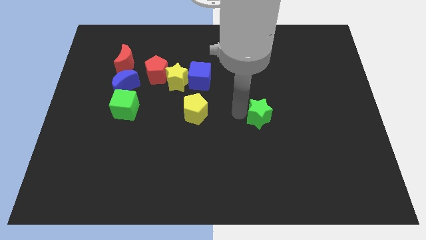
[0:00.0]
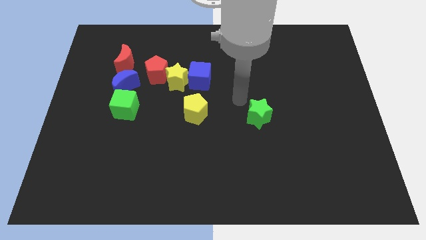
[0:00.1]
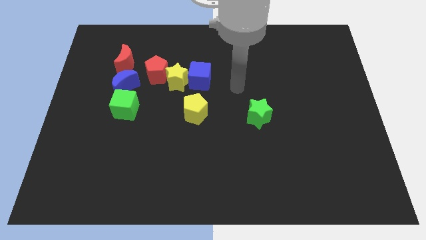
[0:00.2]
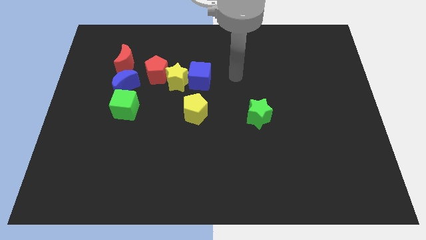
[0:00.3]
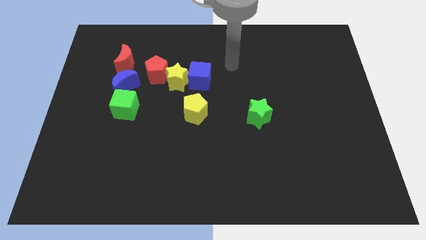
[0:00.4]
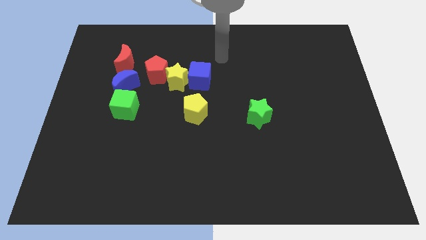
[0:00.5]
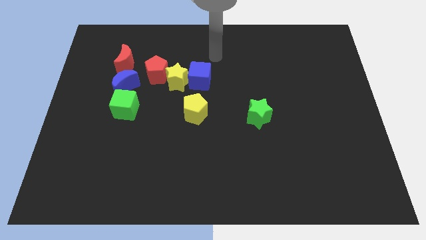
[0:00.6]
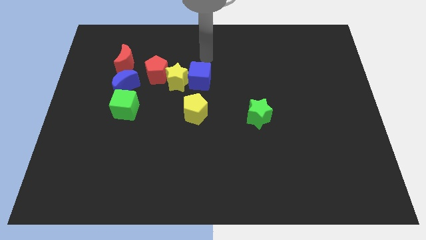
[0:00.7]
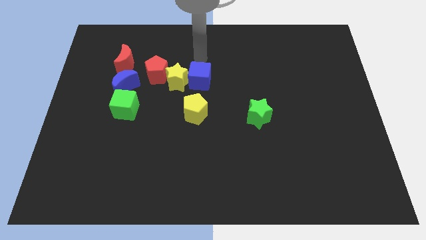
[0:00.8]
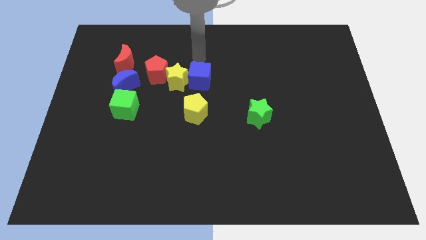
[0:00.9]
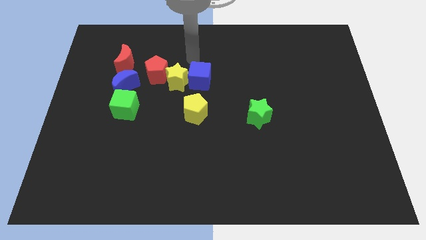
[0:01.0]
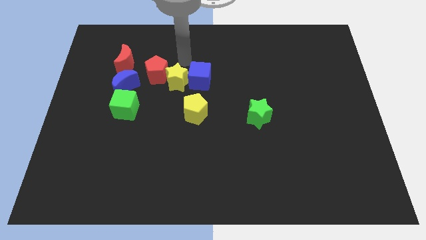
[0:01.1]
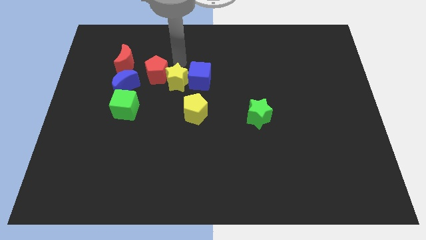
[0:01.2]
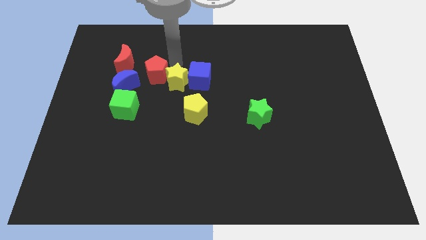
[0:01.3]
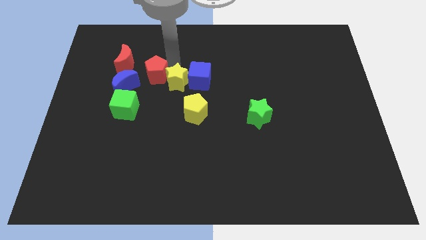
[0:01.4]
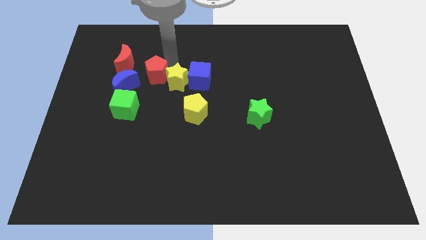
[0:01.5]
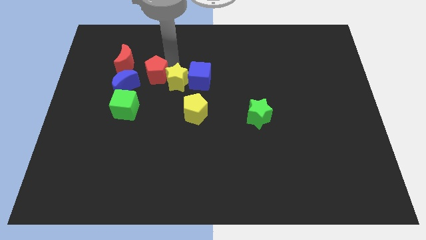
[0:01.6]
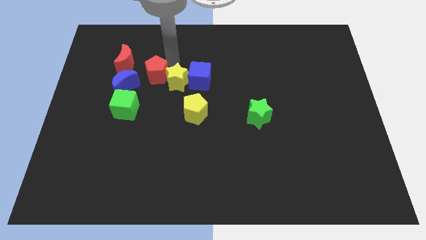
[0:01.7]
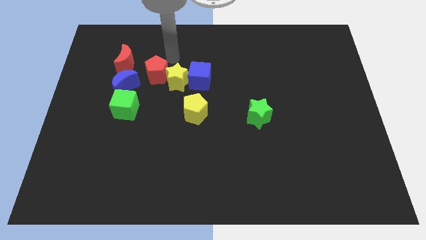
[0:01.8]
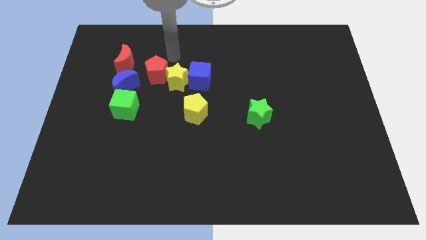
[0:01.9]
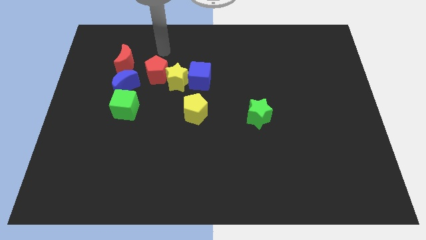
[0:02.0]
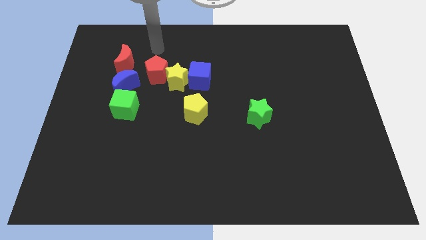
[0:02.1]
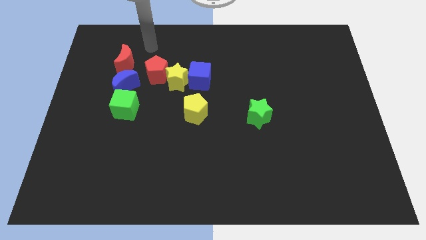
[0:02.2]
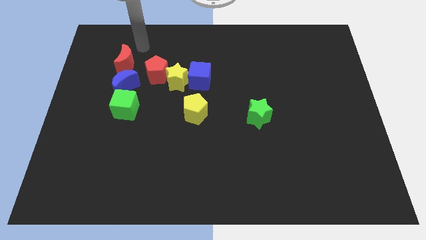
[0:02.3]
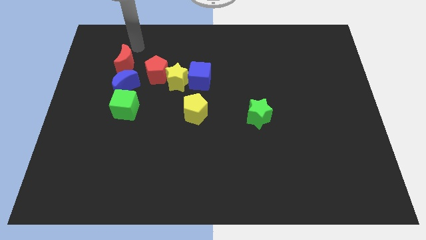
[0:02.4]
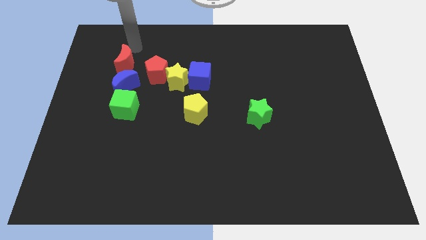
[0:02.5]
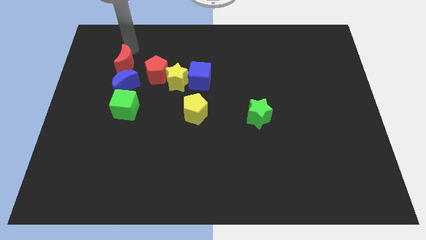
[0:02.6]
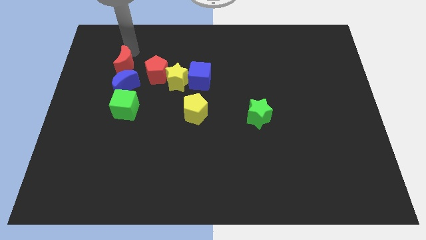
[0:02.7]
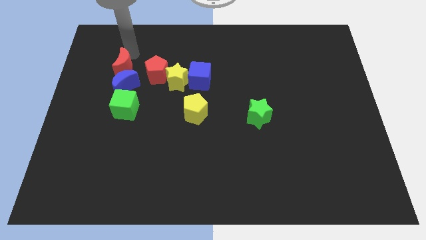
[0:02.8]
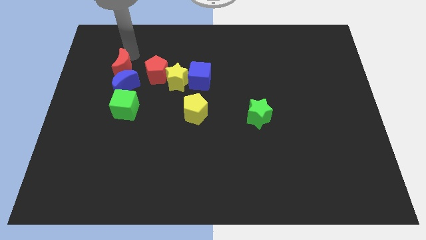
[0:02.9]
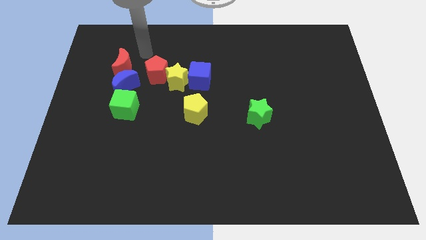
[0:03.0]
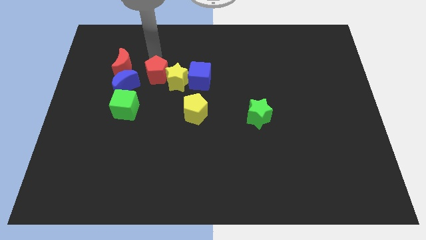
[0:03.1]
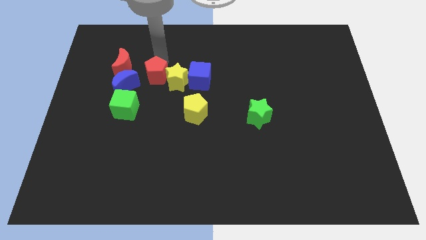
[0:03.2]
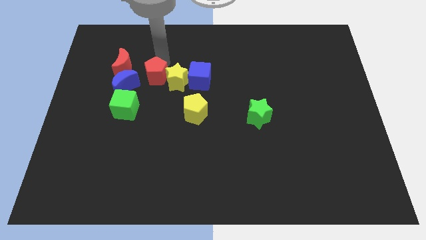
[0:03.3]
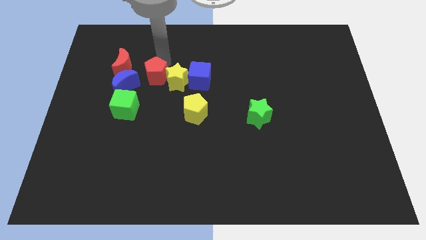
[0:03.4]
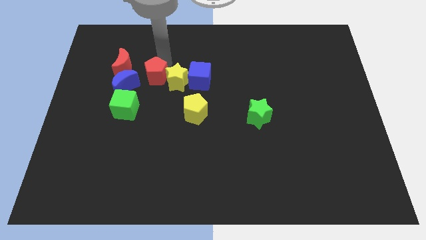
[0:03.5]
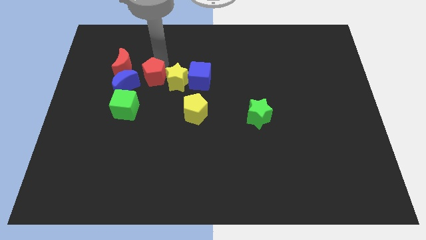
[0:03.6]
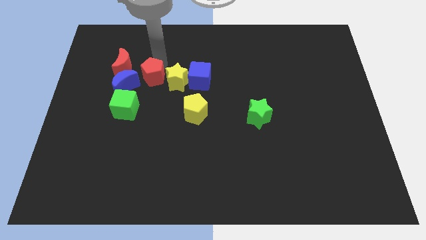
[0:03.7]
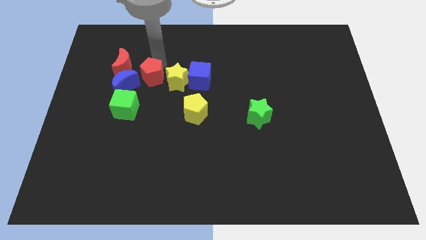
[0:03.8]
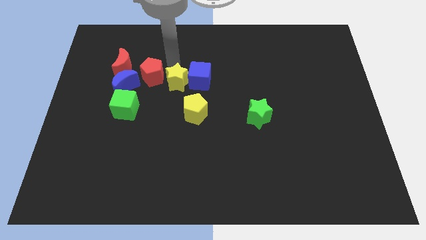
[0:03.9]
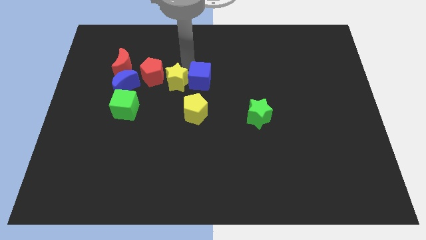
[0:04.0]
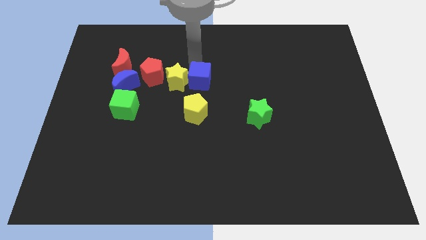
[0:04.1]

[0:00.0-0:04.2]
move your arm away from the green star

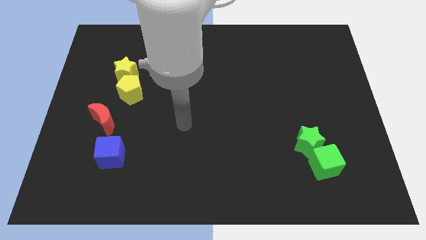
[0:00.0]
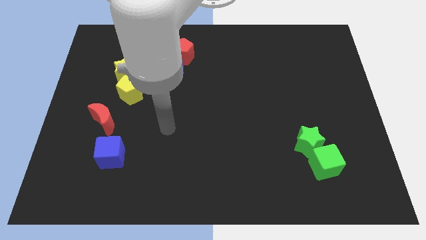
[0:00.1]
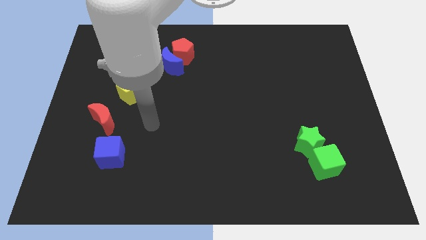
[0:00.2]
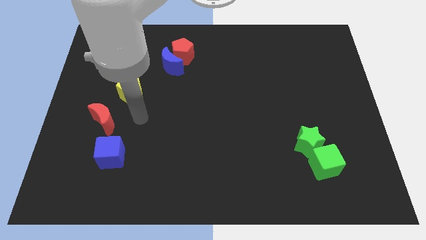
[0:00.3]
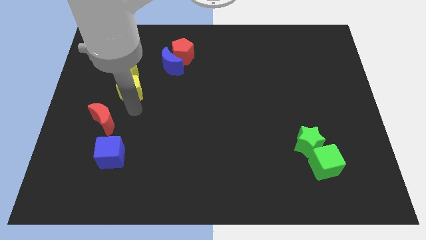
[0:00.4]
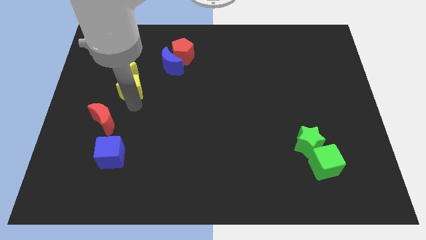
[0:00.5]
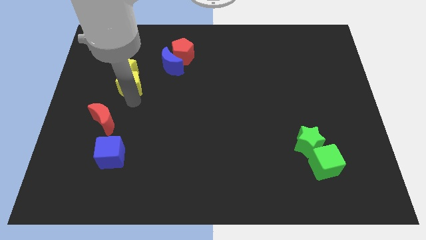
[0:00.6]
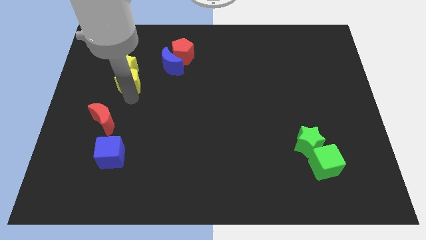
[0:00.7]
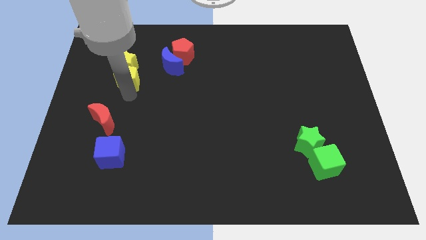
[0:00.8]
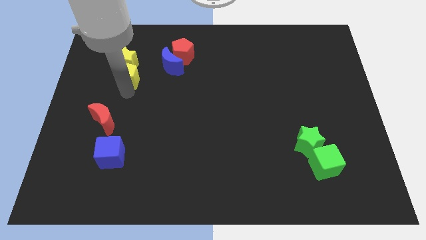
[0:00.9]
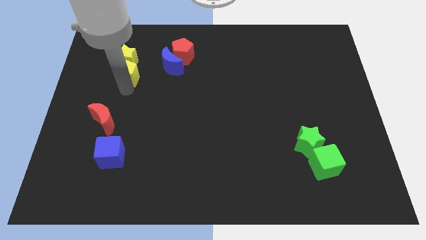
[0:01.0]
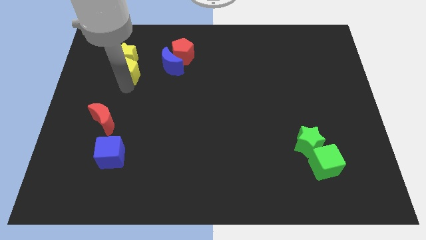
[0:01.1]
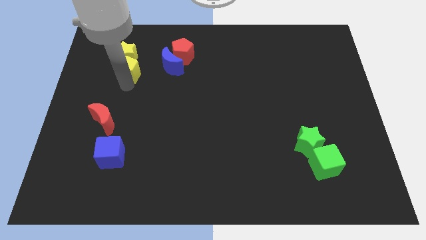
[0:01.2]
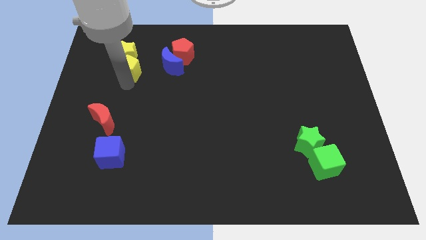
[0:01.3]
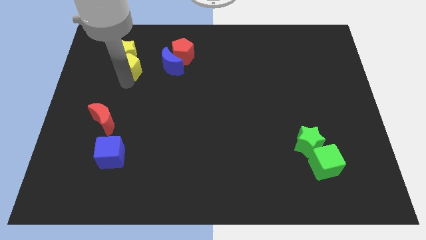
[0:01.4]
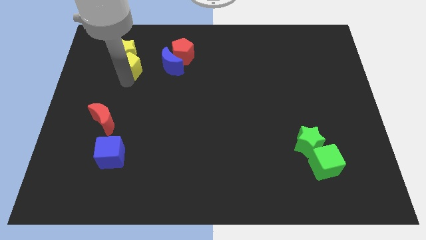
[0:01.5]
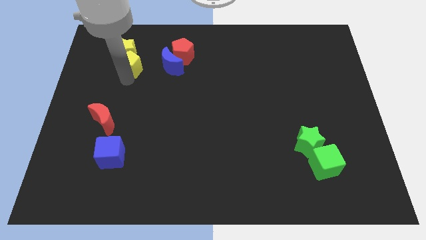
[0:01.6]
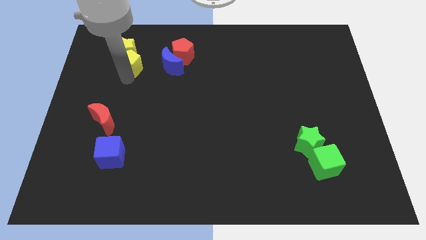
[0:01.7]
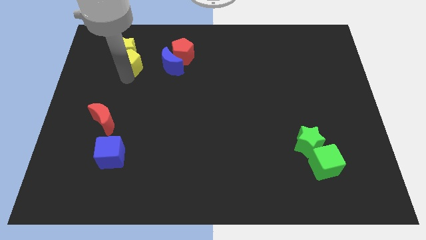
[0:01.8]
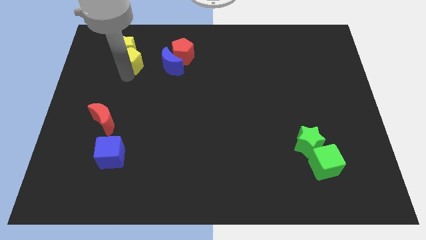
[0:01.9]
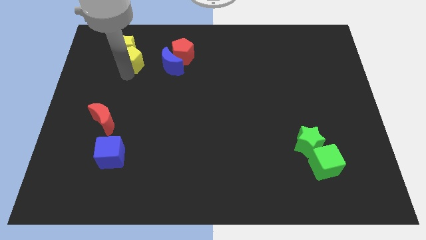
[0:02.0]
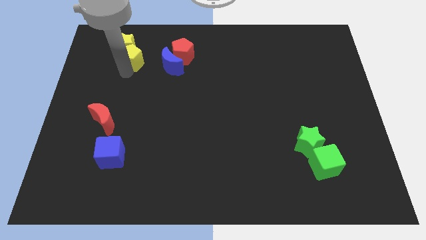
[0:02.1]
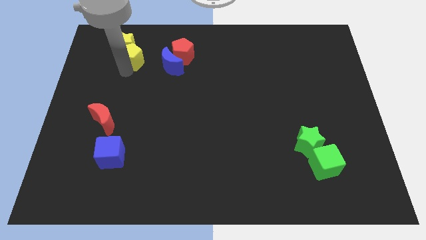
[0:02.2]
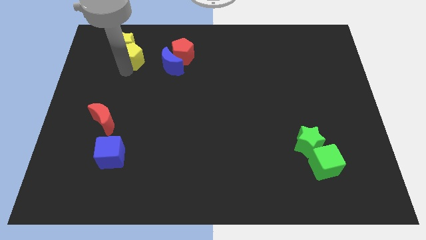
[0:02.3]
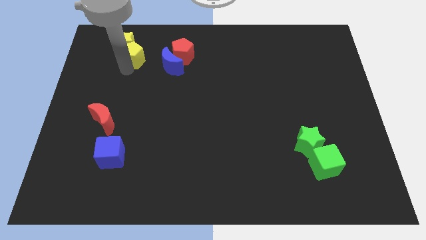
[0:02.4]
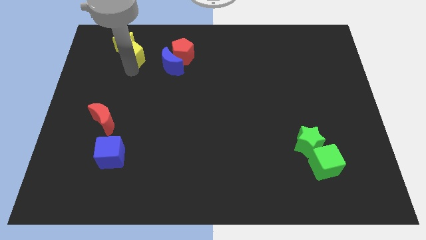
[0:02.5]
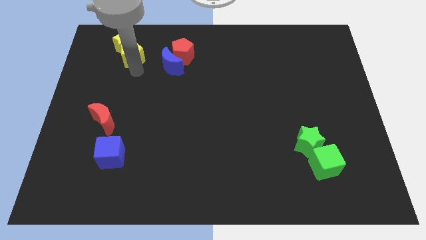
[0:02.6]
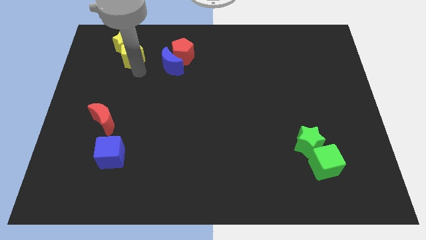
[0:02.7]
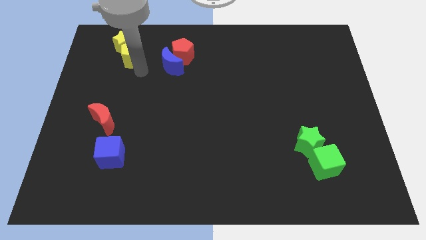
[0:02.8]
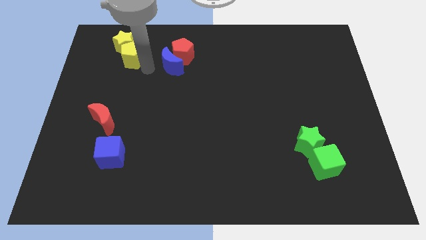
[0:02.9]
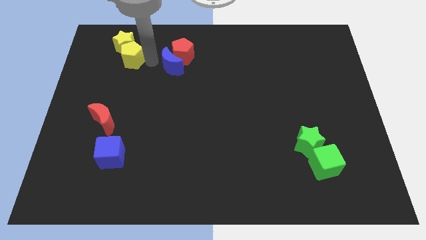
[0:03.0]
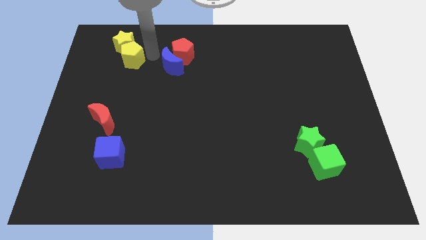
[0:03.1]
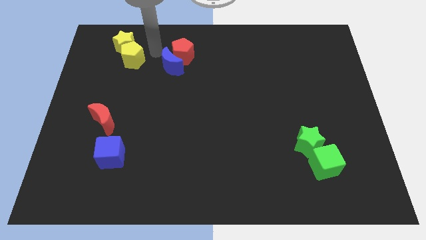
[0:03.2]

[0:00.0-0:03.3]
push the yellow star towards the top left corner with the yellow pentagon

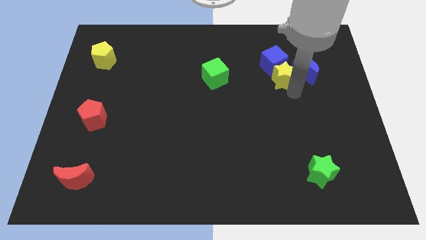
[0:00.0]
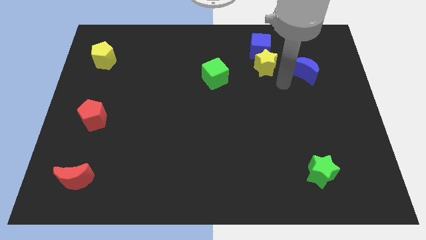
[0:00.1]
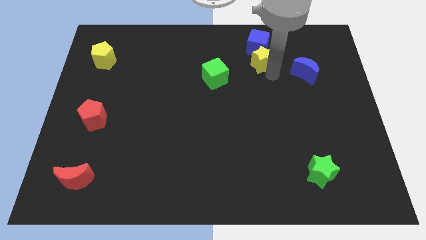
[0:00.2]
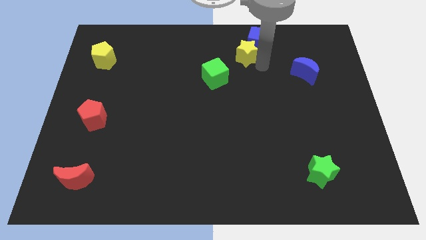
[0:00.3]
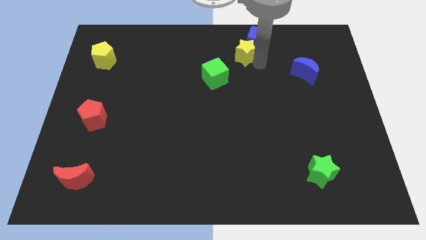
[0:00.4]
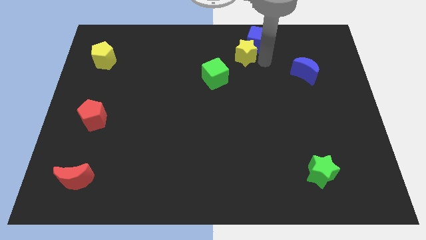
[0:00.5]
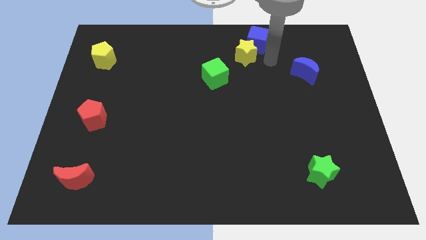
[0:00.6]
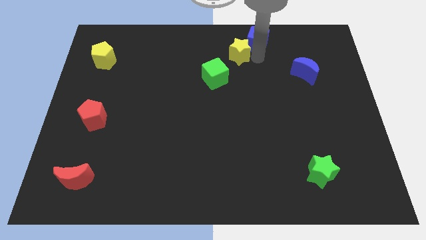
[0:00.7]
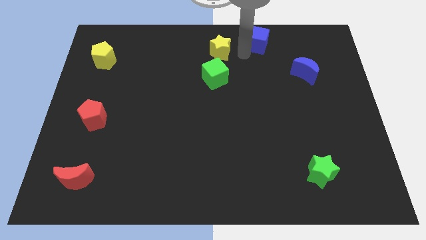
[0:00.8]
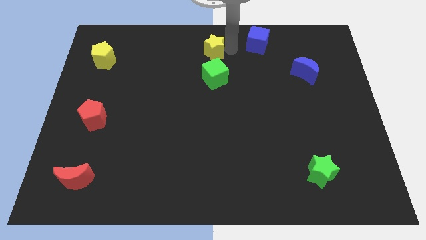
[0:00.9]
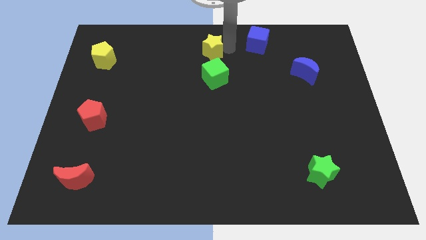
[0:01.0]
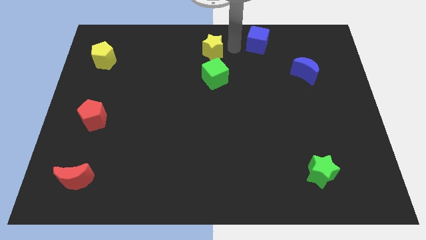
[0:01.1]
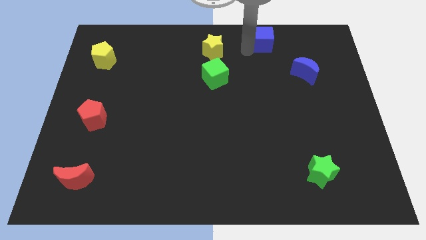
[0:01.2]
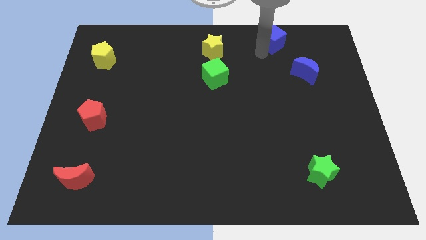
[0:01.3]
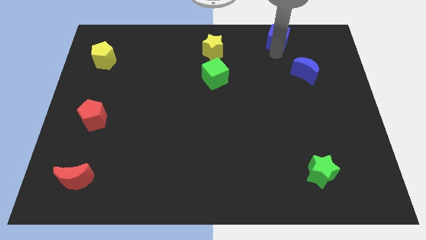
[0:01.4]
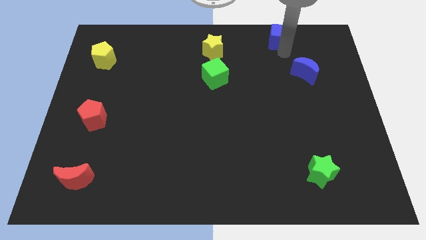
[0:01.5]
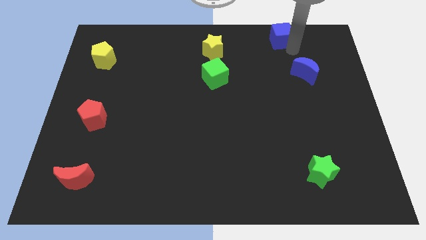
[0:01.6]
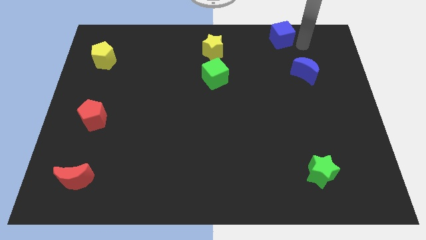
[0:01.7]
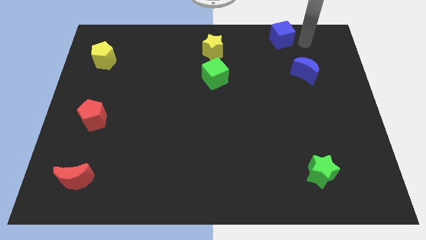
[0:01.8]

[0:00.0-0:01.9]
slide the yellow star towards the top of the green cube
